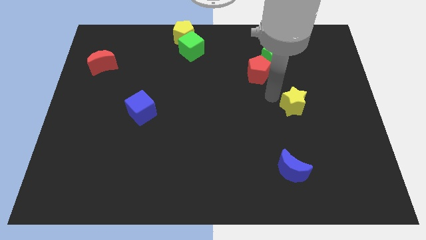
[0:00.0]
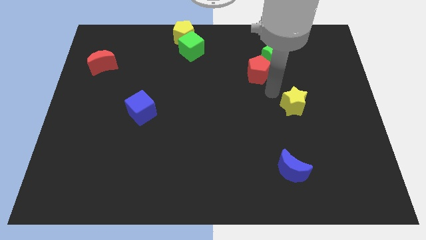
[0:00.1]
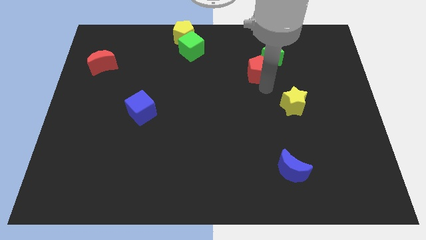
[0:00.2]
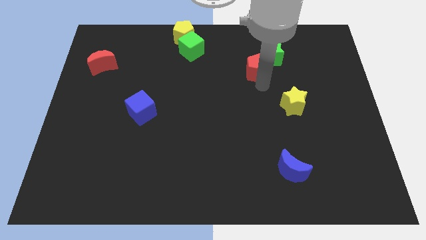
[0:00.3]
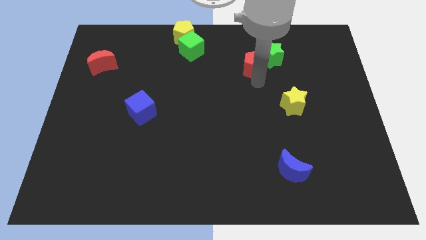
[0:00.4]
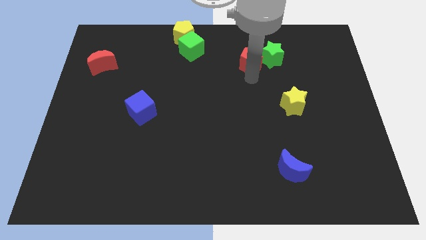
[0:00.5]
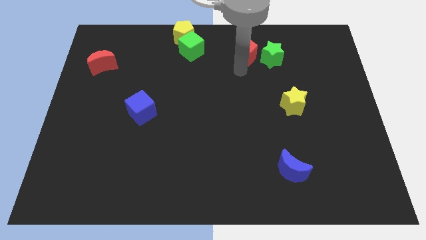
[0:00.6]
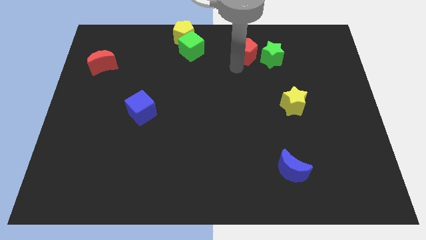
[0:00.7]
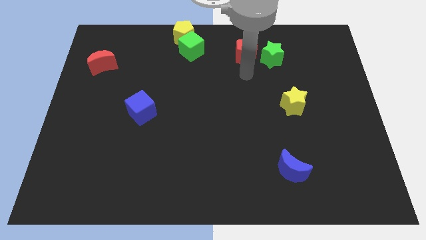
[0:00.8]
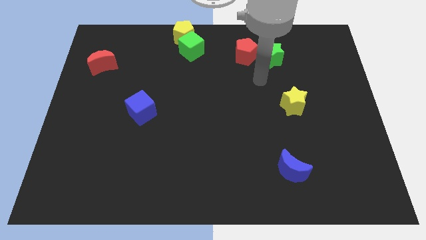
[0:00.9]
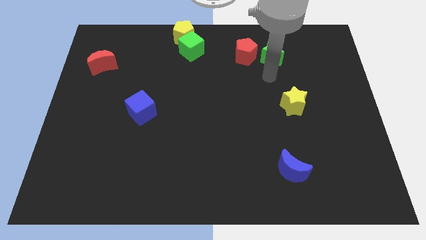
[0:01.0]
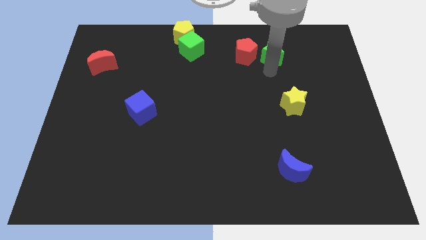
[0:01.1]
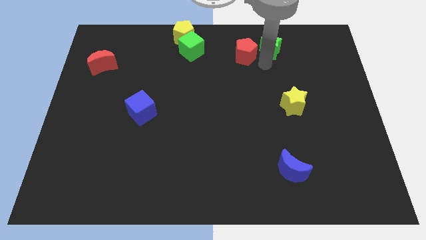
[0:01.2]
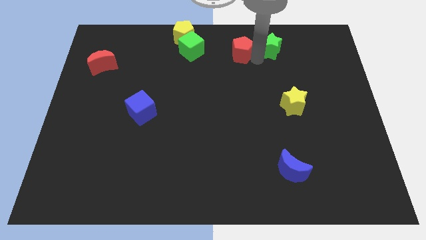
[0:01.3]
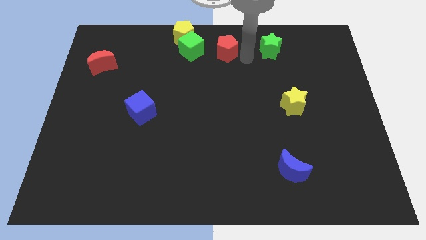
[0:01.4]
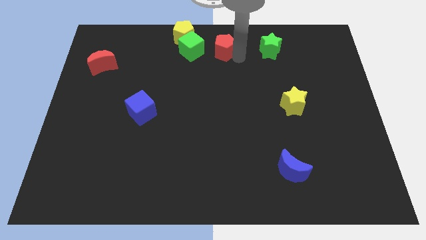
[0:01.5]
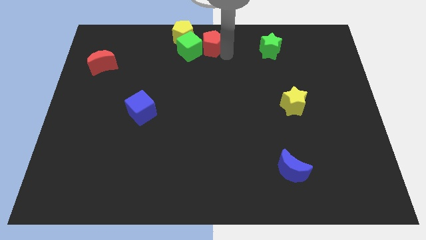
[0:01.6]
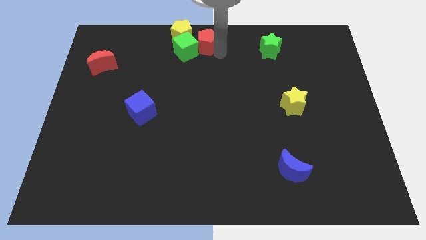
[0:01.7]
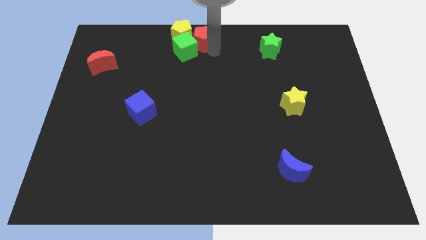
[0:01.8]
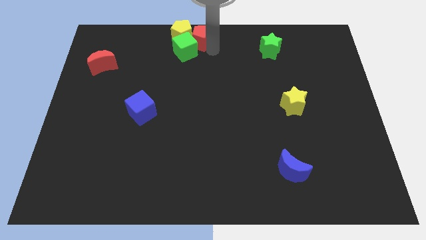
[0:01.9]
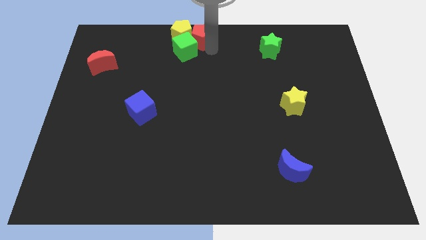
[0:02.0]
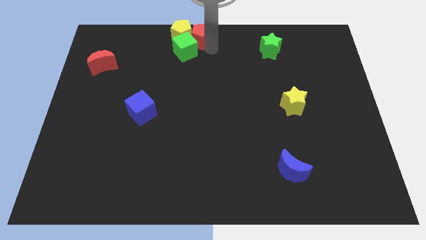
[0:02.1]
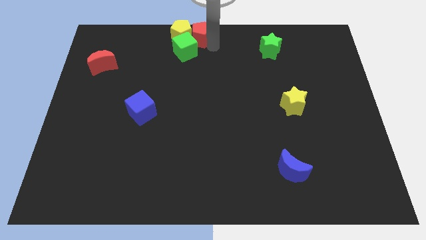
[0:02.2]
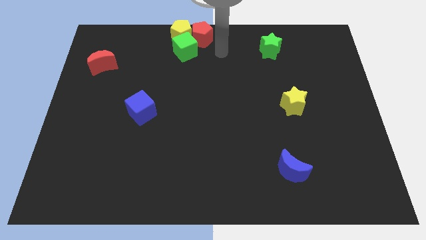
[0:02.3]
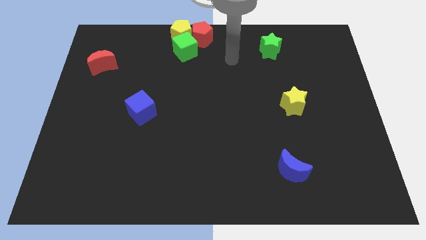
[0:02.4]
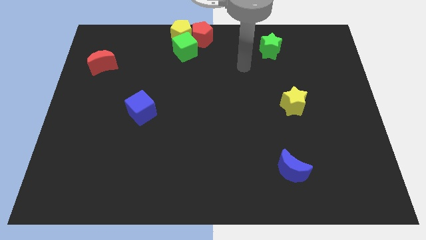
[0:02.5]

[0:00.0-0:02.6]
push red pentagon right to yellow pentagon

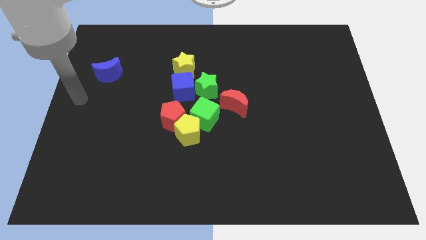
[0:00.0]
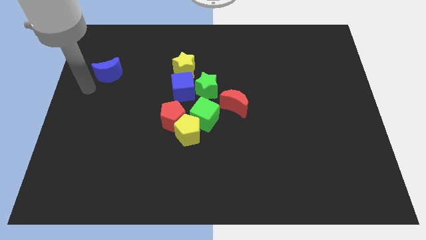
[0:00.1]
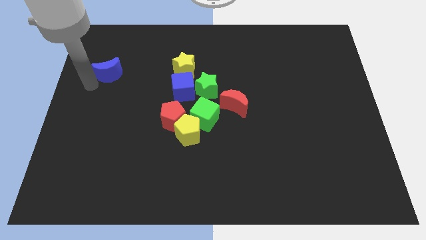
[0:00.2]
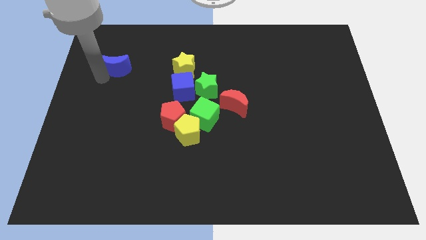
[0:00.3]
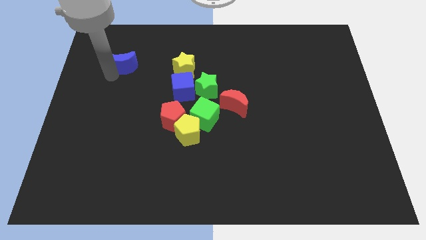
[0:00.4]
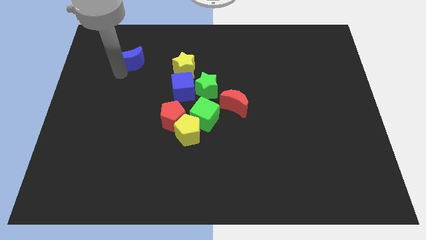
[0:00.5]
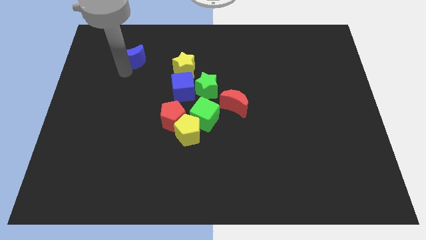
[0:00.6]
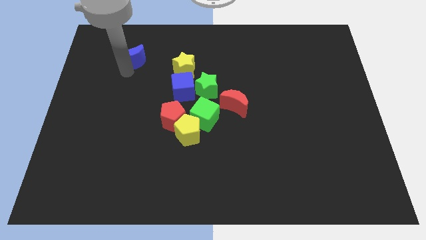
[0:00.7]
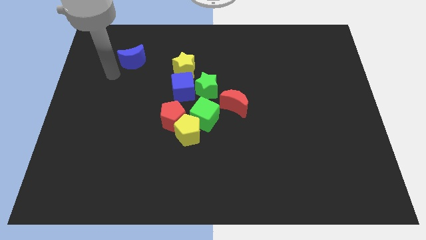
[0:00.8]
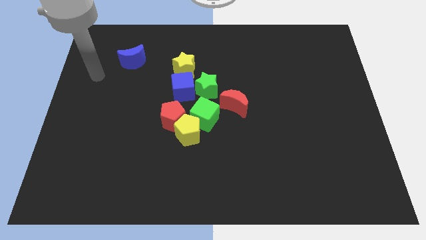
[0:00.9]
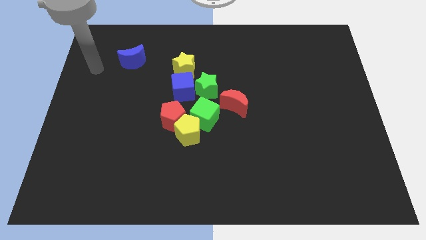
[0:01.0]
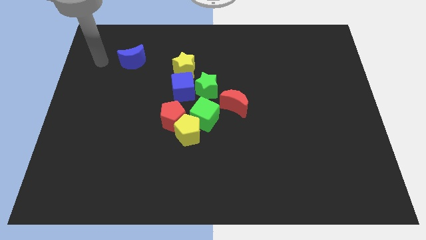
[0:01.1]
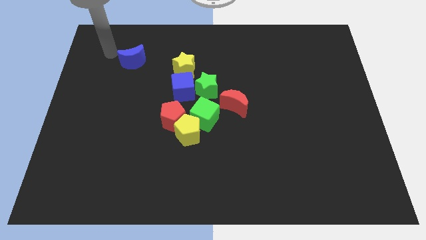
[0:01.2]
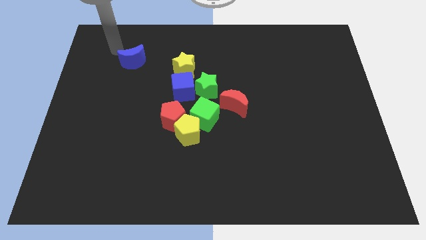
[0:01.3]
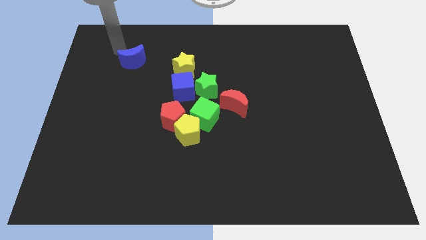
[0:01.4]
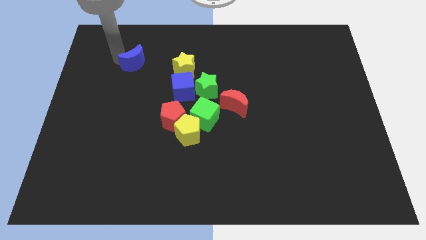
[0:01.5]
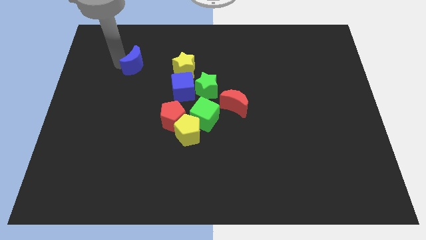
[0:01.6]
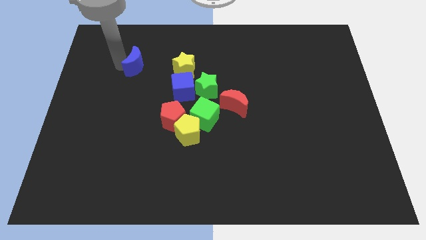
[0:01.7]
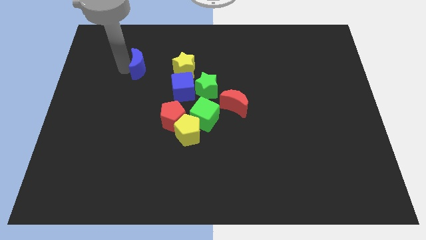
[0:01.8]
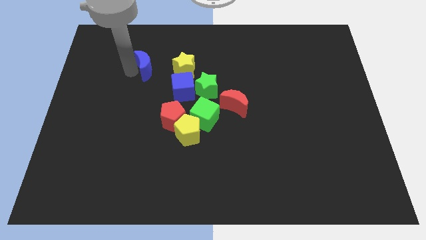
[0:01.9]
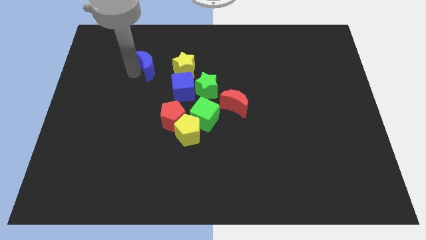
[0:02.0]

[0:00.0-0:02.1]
move the blue semicircle to the left side of the yellow star

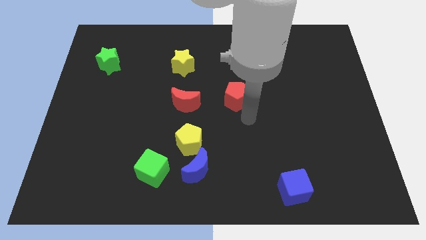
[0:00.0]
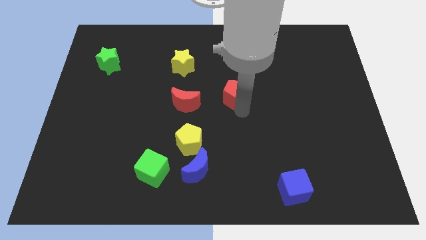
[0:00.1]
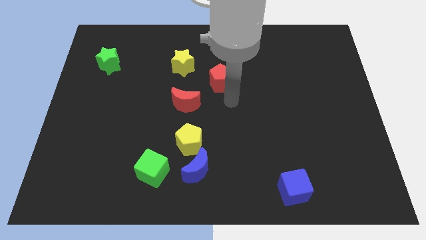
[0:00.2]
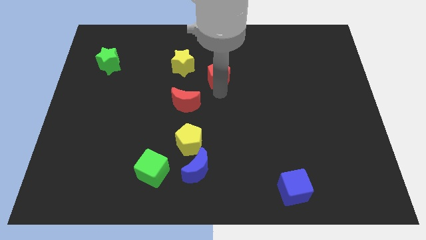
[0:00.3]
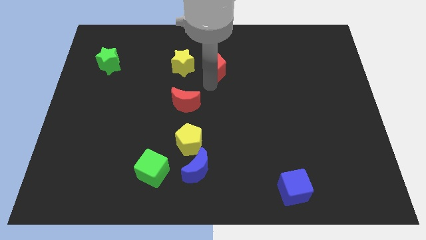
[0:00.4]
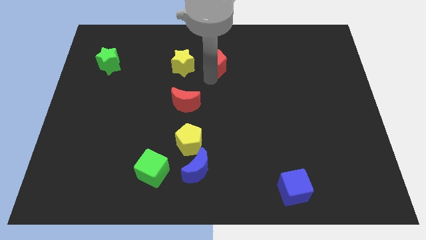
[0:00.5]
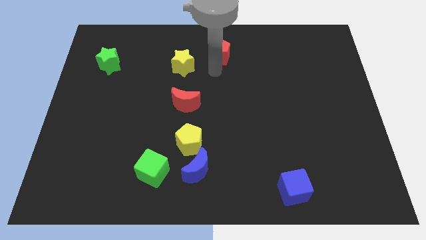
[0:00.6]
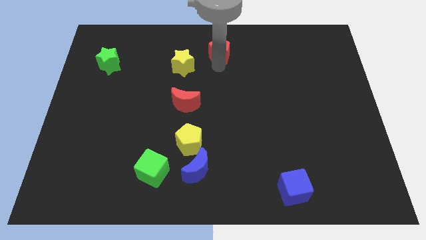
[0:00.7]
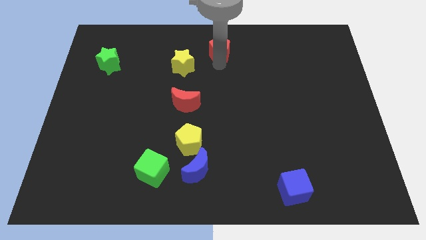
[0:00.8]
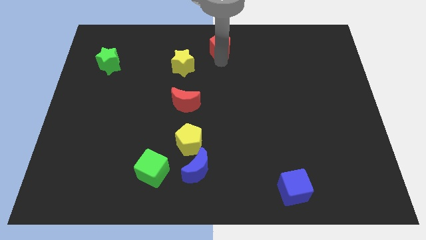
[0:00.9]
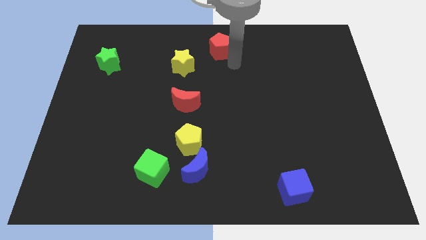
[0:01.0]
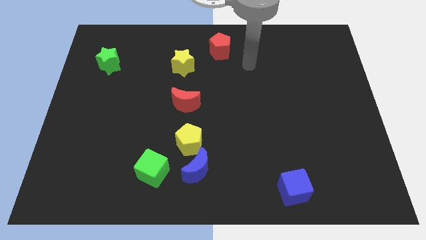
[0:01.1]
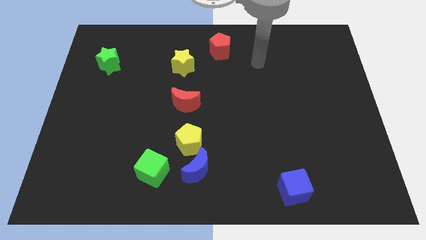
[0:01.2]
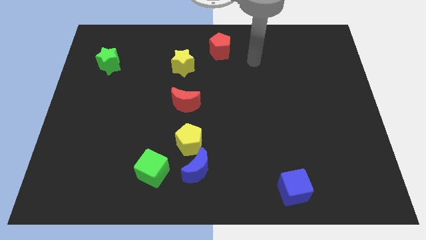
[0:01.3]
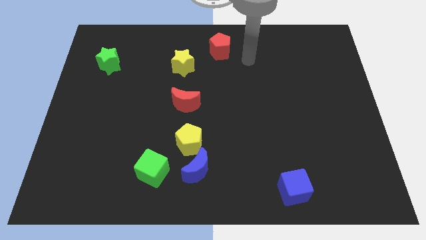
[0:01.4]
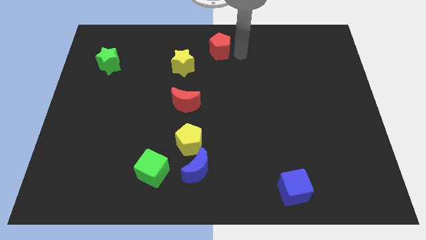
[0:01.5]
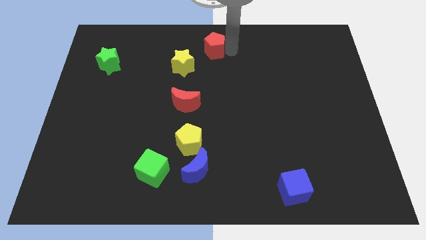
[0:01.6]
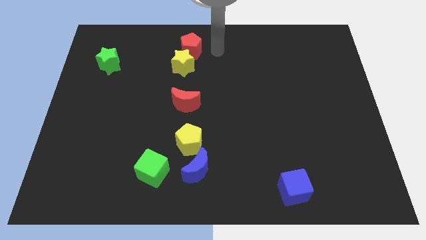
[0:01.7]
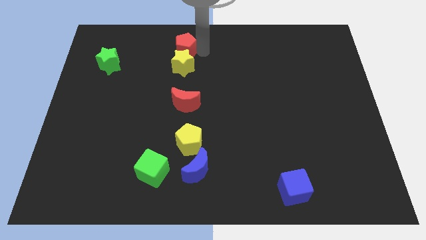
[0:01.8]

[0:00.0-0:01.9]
place the red pentagon to the top side of the yellow star

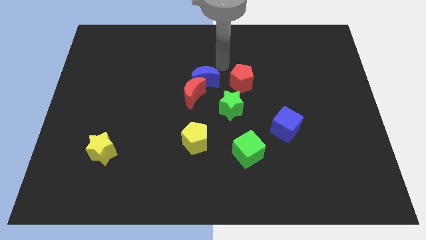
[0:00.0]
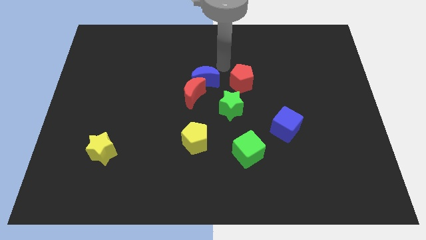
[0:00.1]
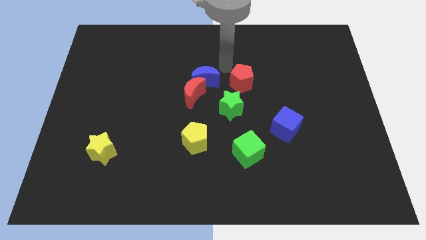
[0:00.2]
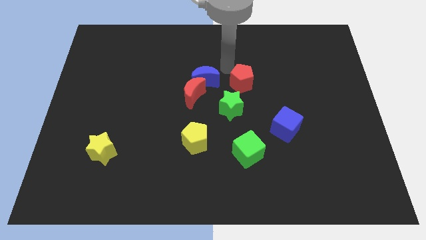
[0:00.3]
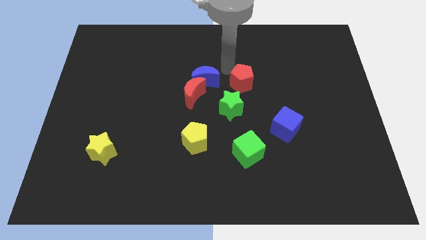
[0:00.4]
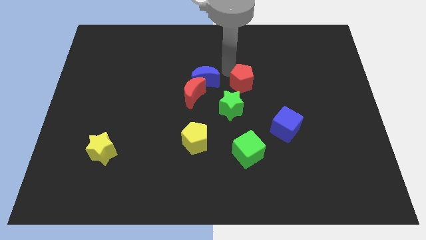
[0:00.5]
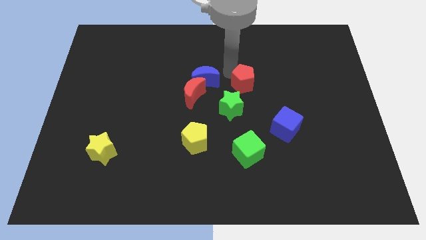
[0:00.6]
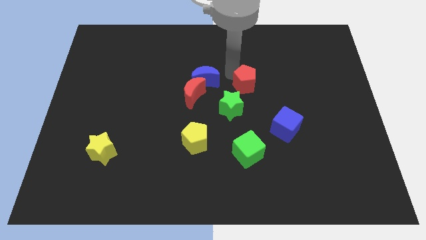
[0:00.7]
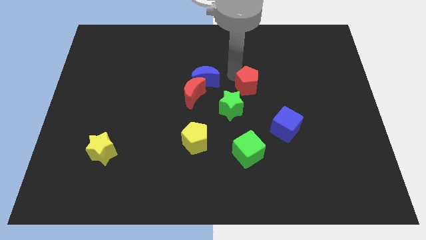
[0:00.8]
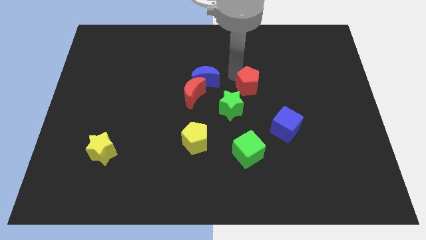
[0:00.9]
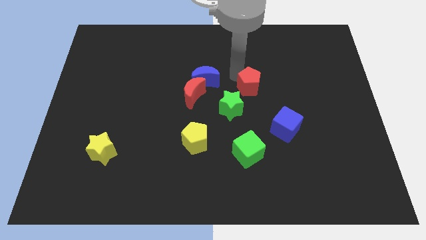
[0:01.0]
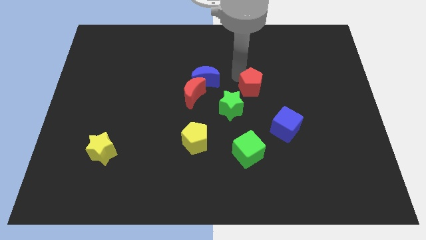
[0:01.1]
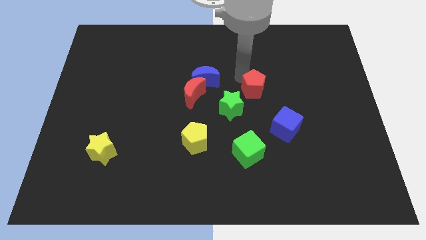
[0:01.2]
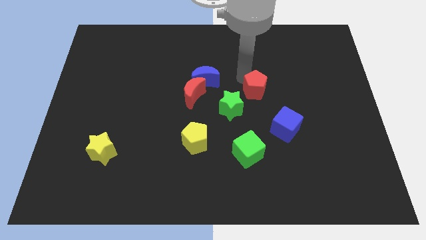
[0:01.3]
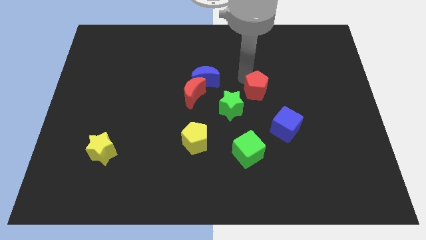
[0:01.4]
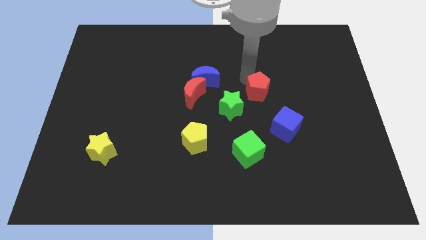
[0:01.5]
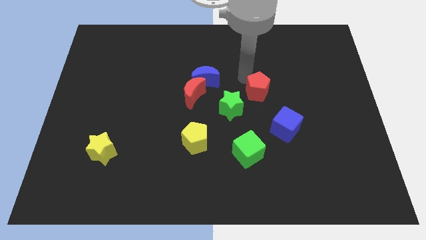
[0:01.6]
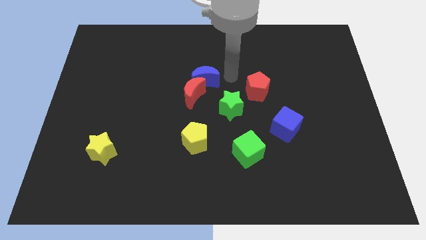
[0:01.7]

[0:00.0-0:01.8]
slide the red pentagon away from the green star

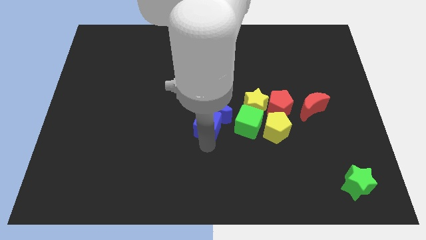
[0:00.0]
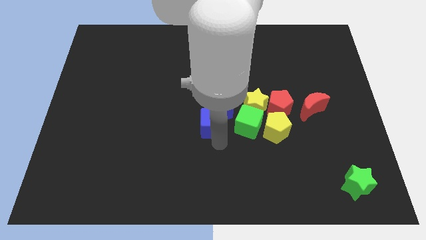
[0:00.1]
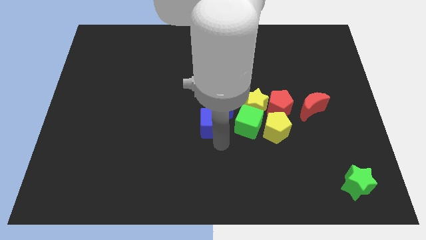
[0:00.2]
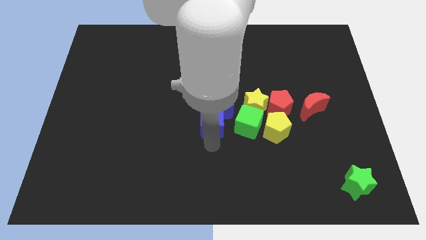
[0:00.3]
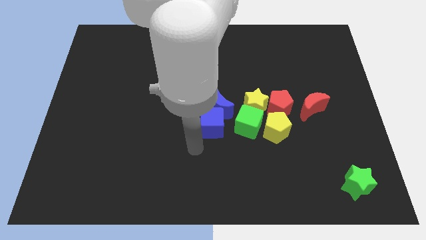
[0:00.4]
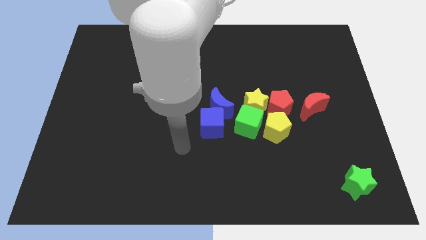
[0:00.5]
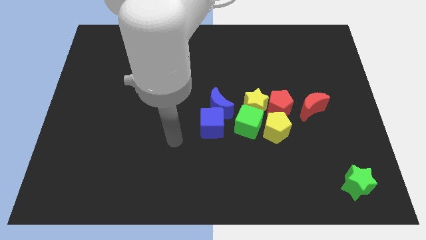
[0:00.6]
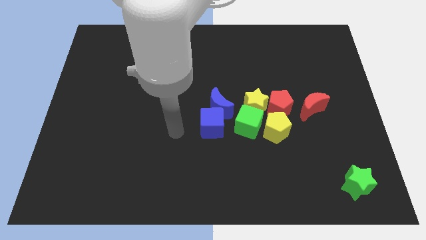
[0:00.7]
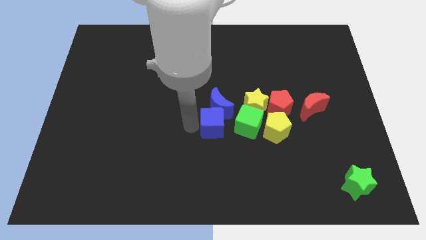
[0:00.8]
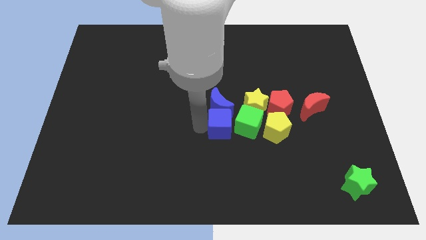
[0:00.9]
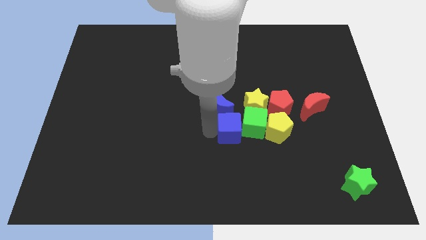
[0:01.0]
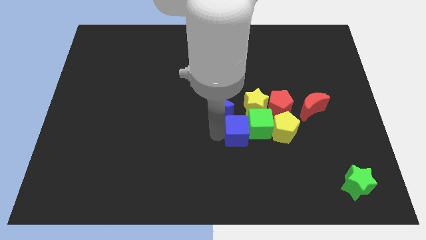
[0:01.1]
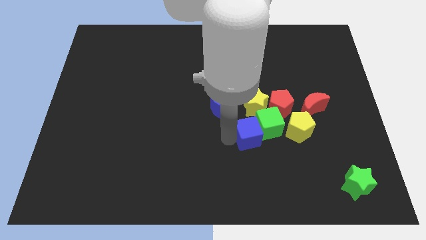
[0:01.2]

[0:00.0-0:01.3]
push the blue cube into the green cube towards the right
